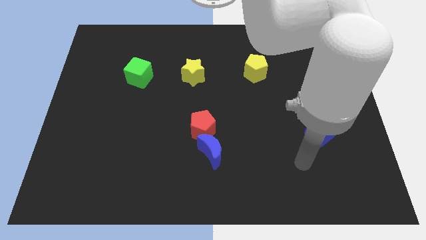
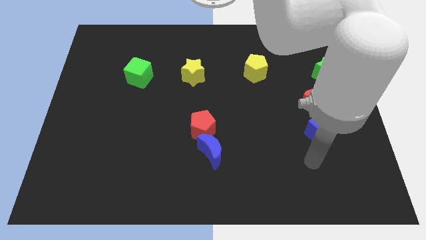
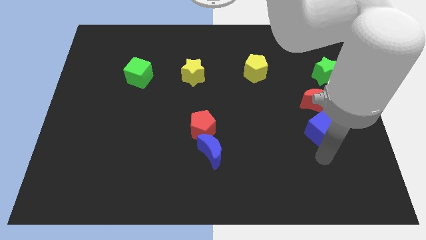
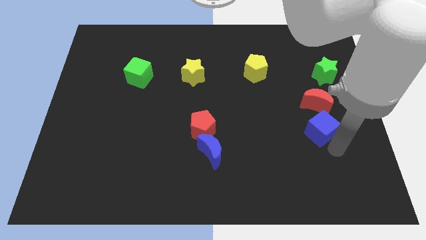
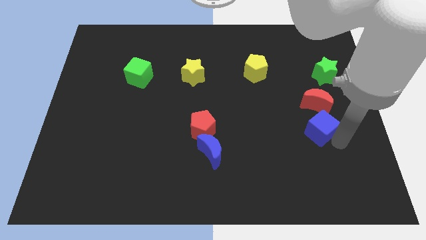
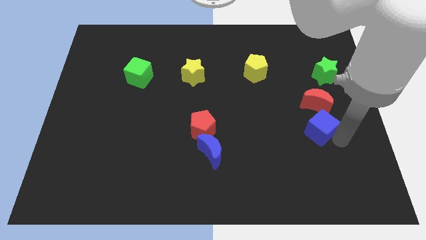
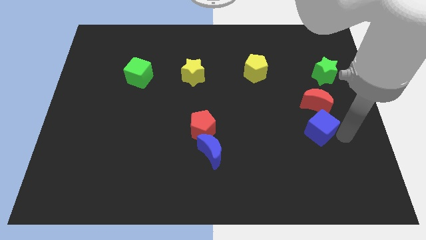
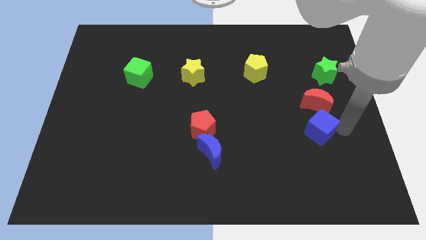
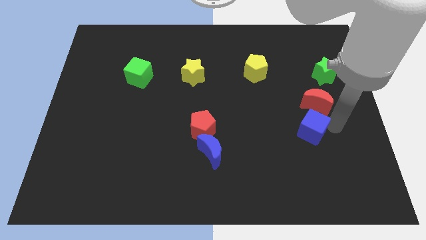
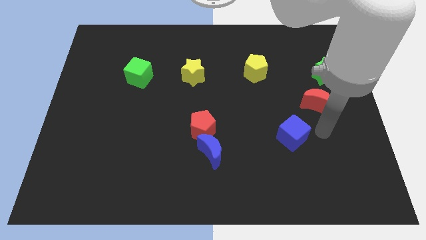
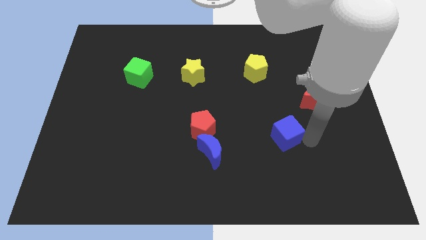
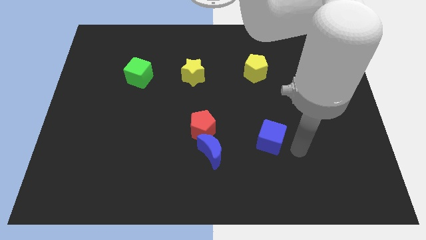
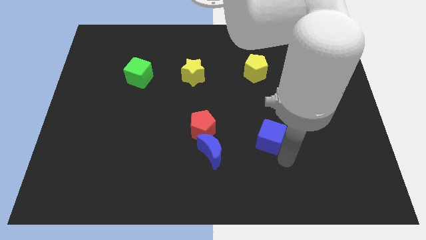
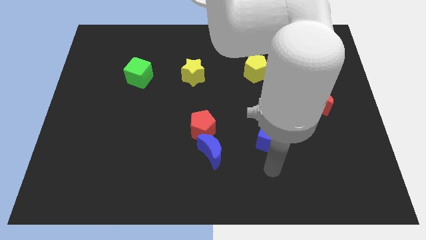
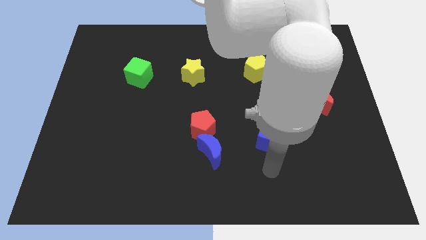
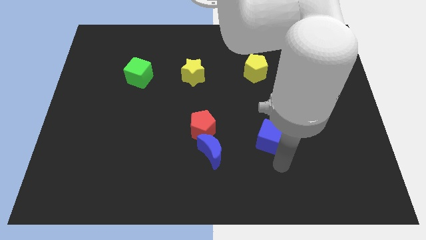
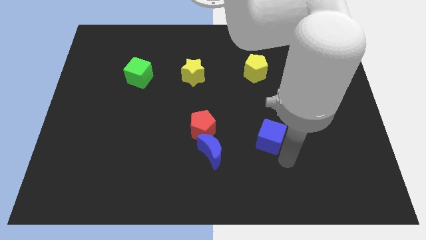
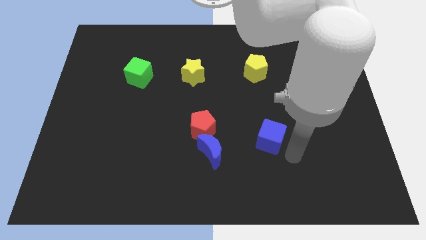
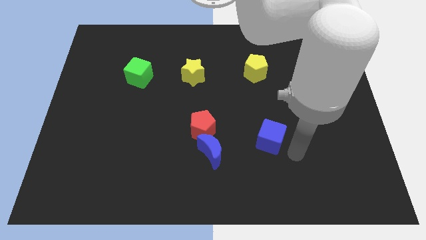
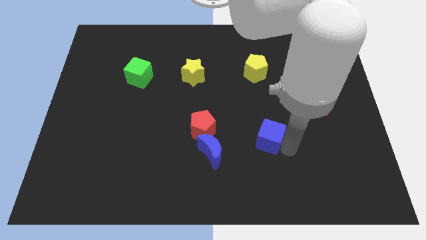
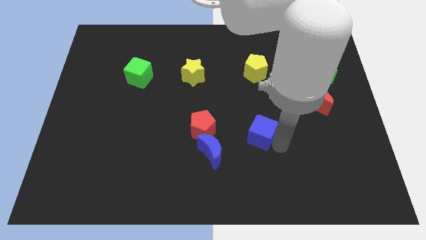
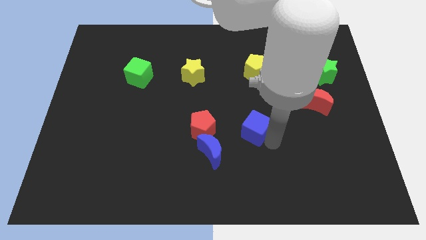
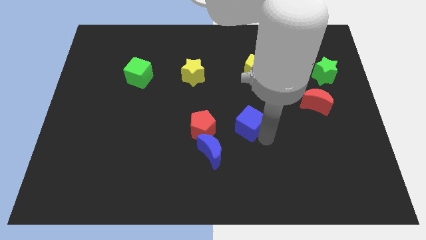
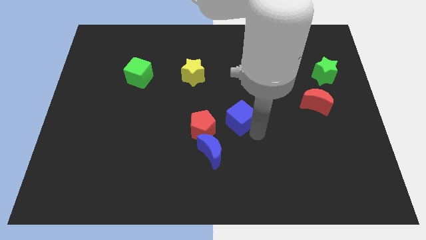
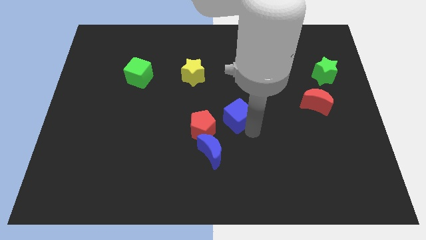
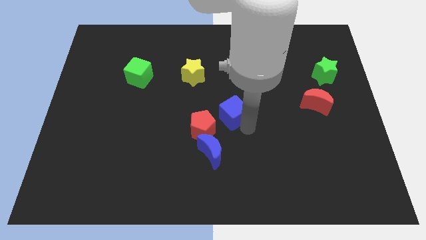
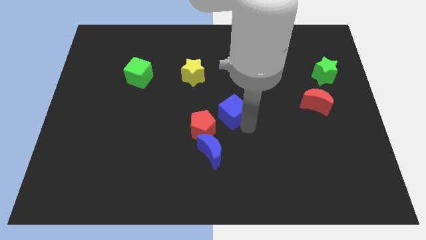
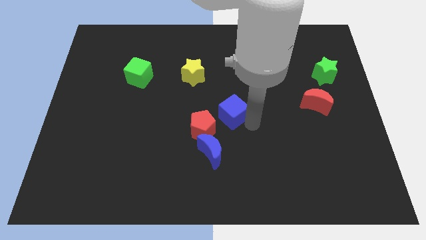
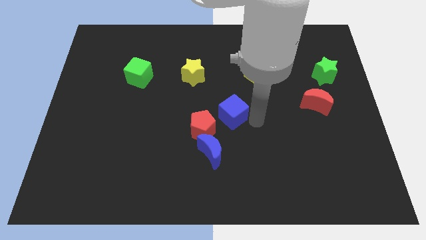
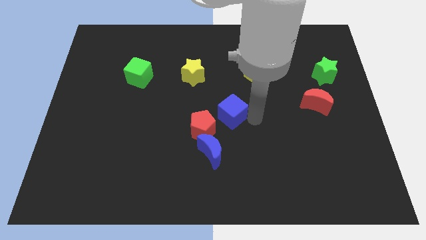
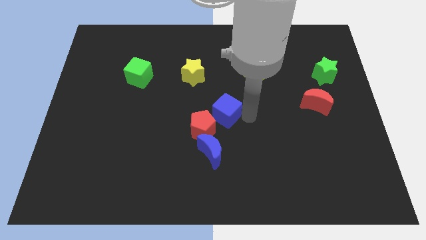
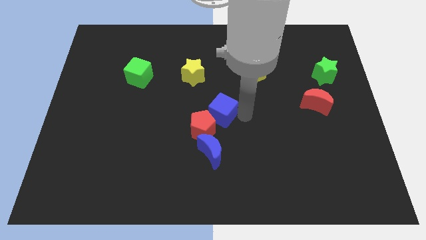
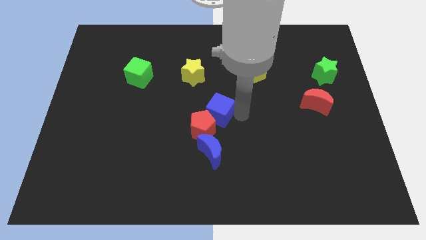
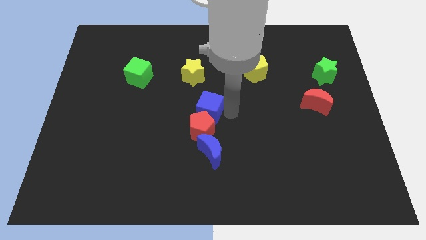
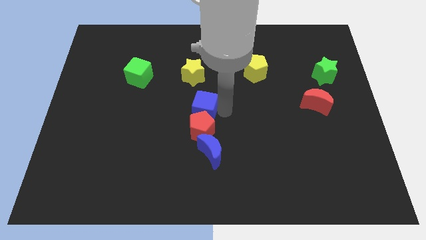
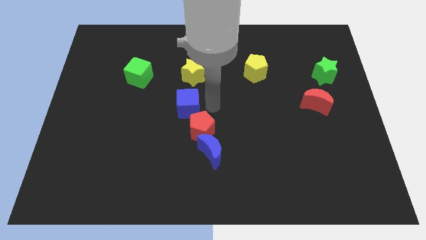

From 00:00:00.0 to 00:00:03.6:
place the blue cube in between yellow star and blue moon

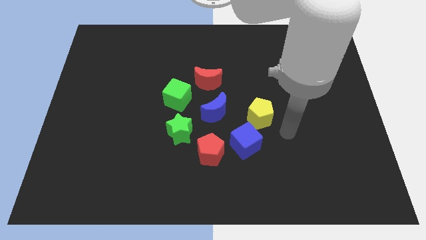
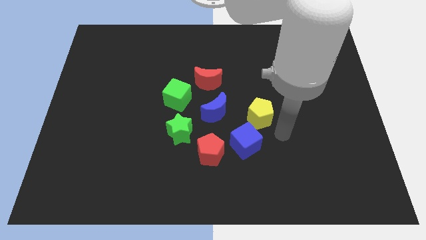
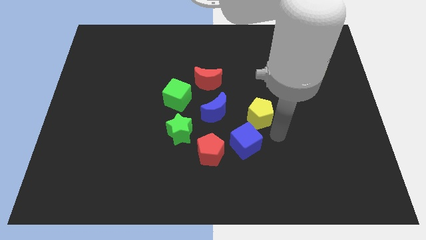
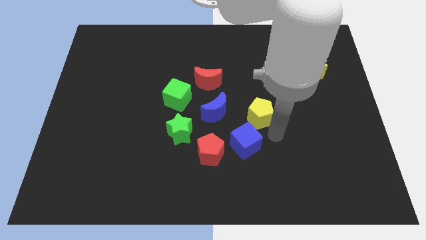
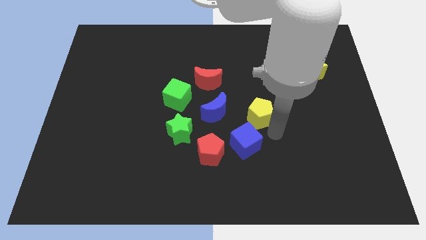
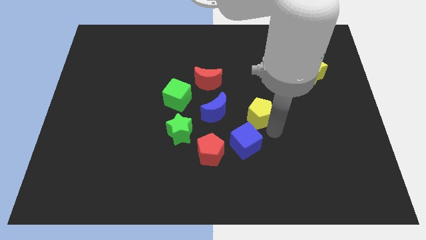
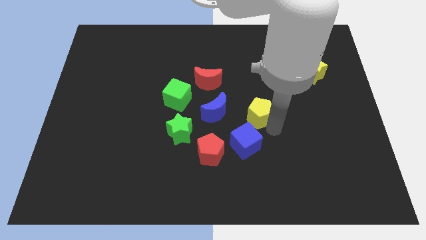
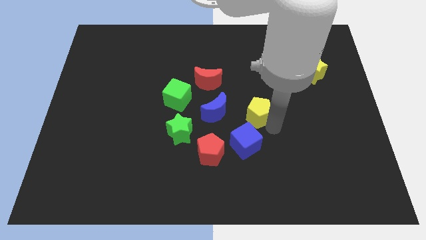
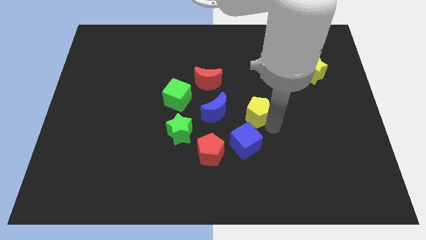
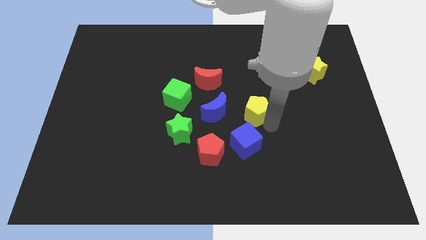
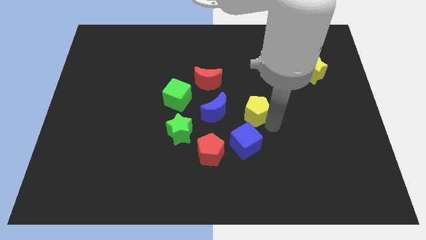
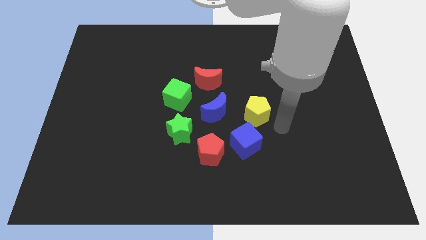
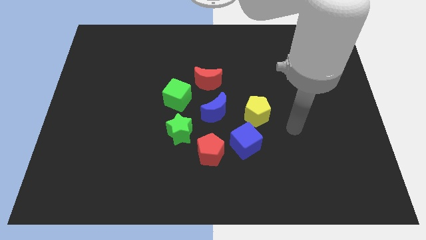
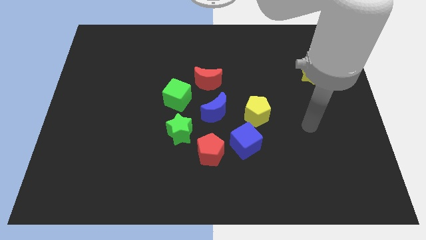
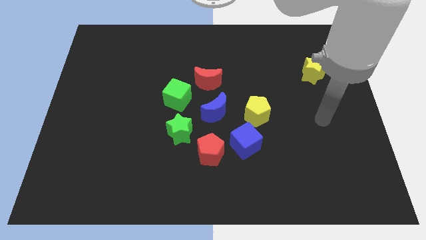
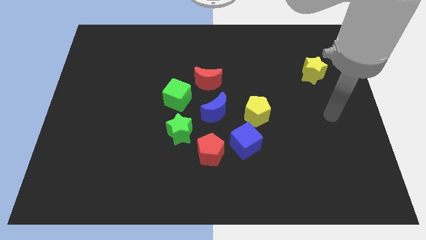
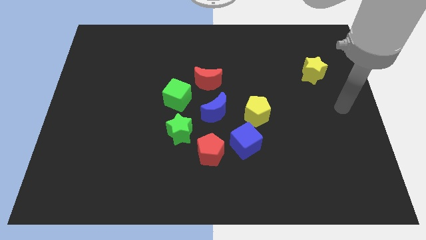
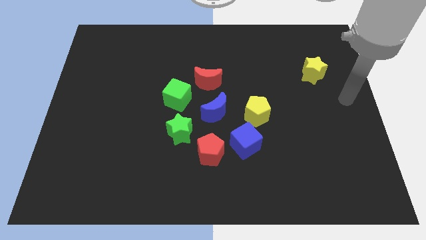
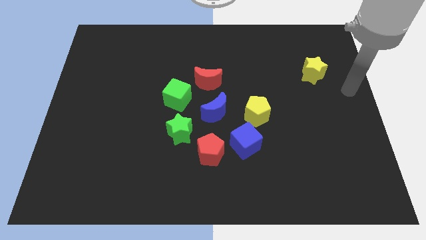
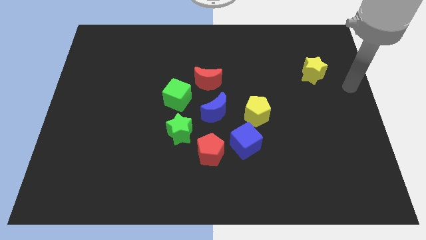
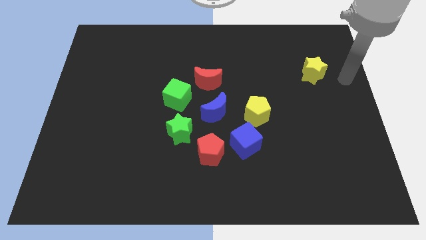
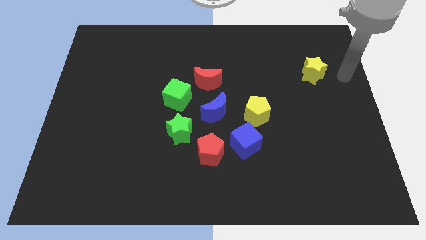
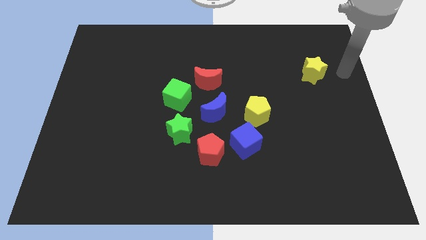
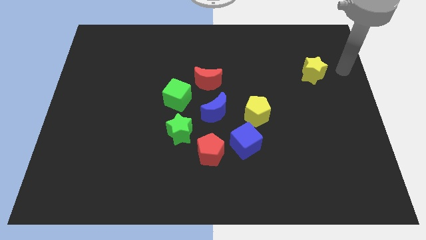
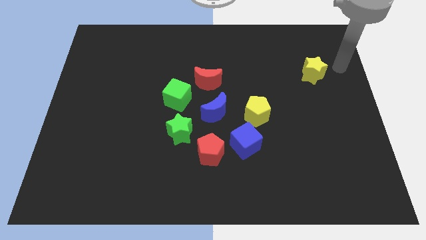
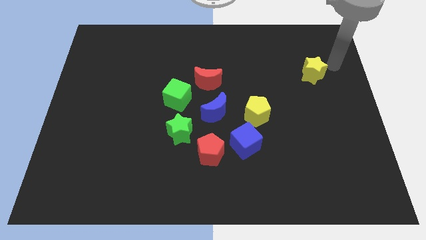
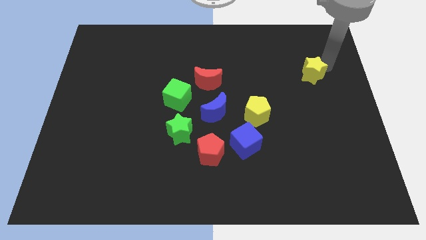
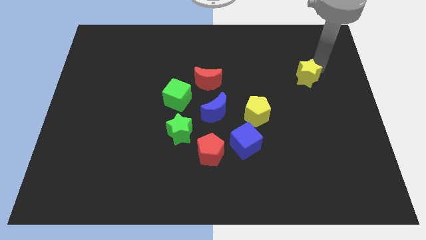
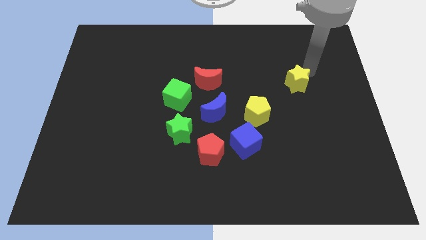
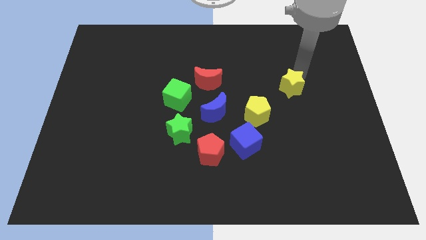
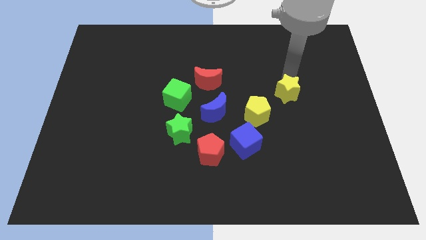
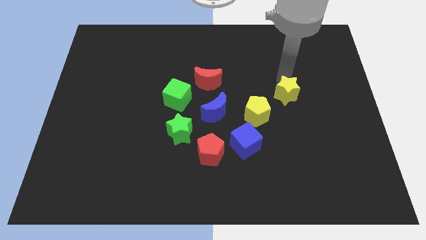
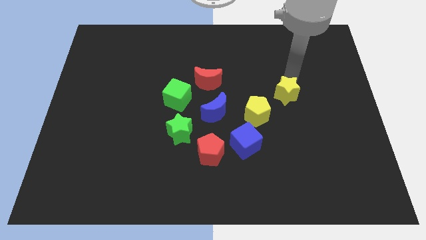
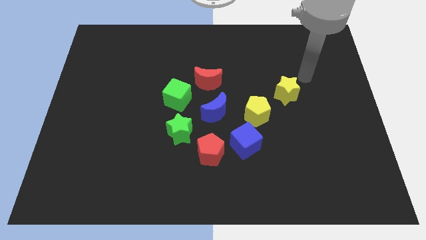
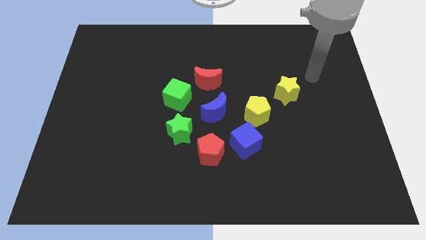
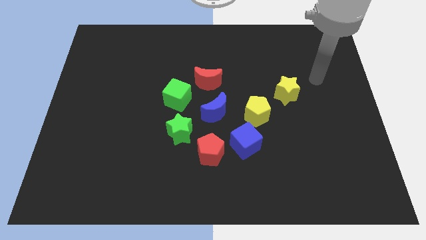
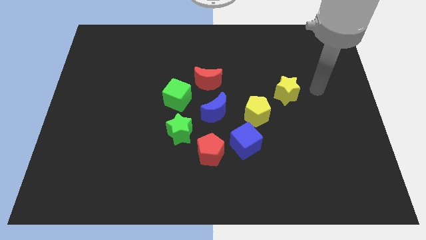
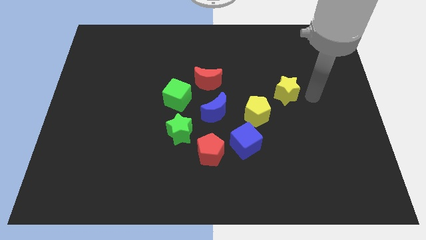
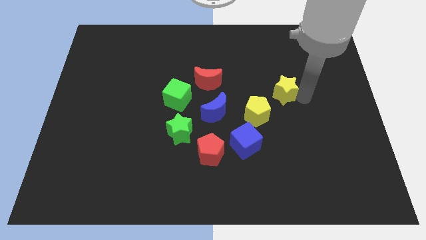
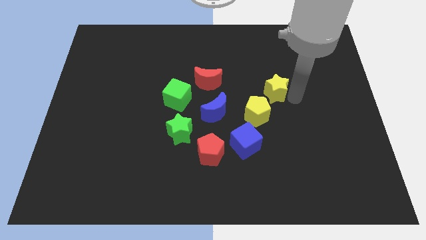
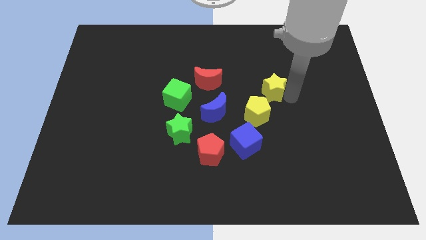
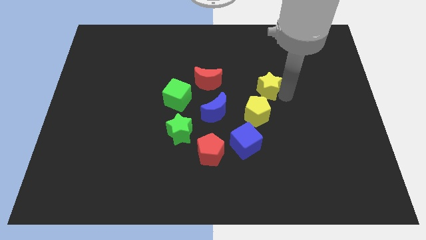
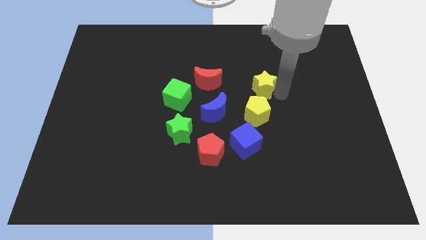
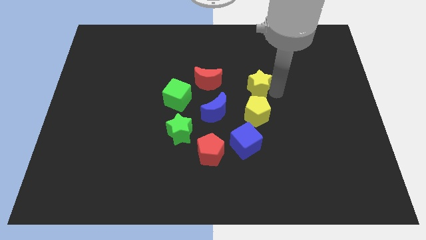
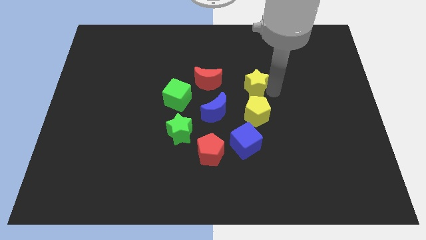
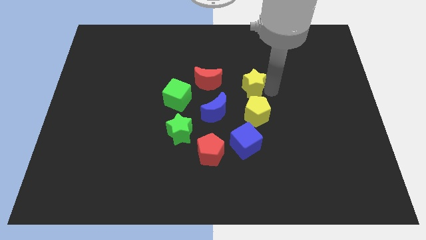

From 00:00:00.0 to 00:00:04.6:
place the yellow star above the yellow pentagon

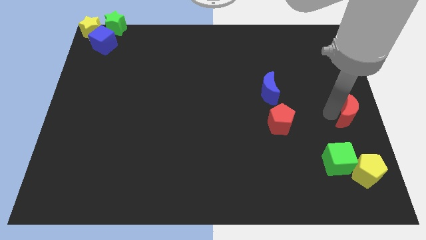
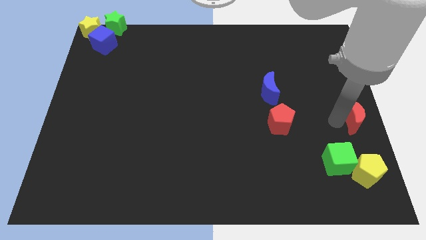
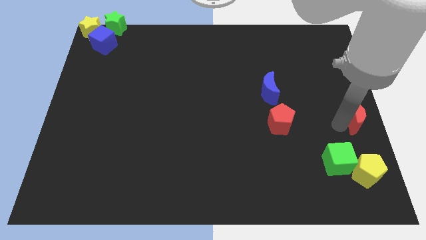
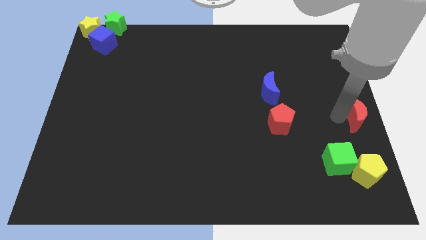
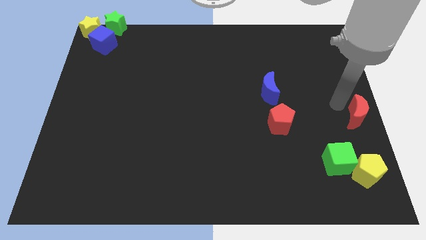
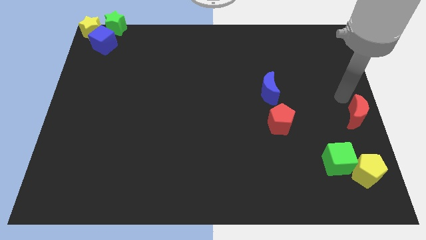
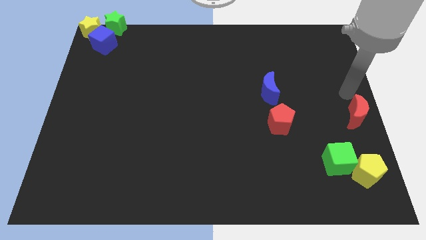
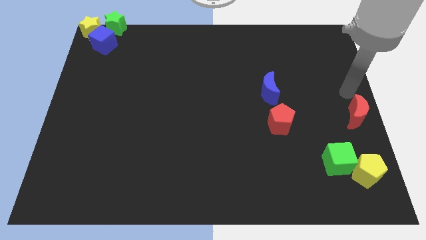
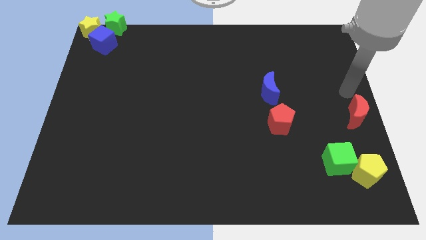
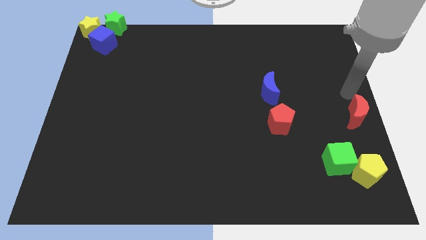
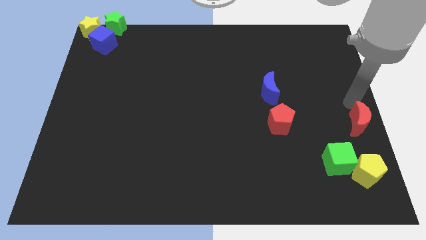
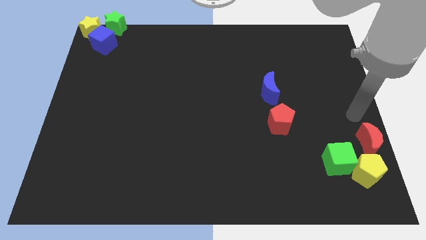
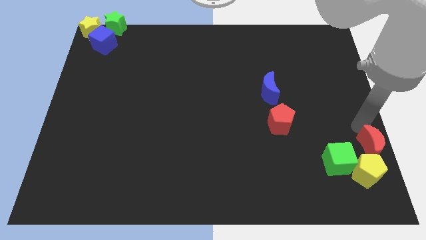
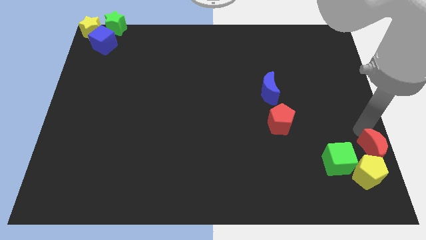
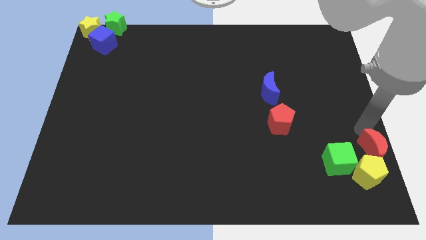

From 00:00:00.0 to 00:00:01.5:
push red moon into the yellow pentagon
